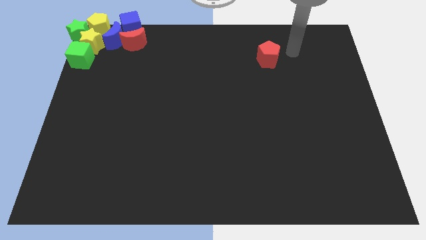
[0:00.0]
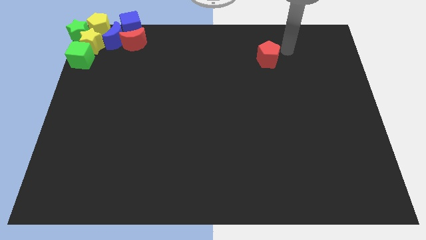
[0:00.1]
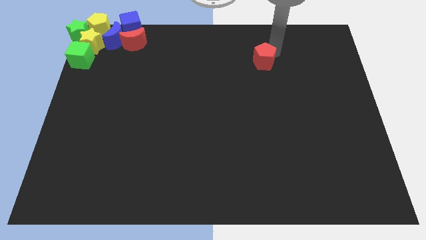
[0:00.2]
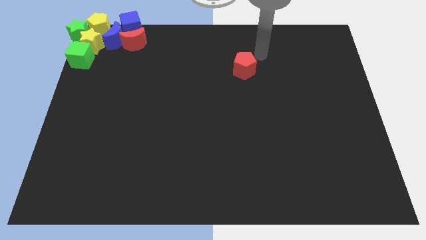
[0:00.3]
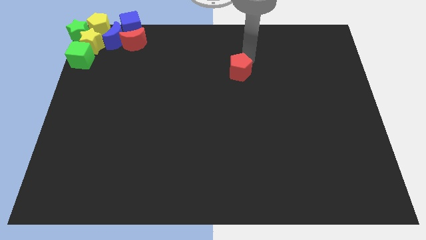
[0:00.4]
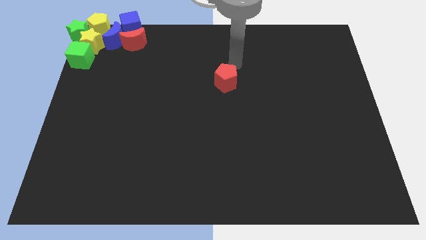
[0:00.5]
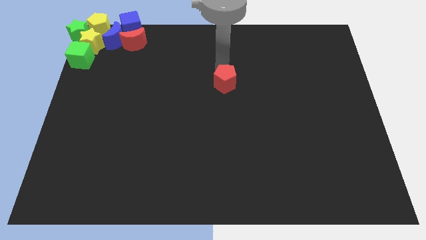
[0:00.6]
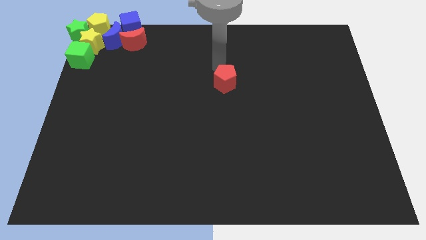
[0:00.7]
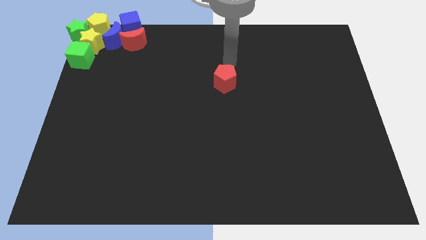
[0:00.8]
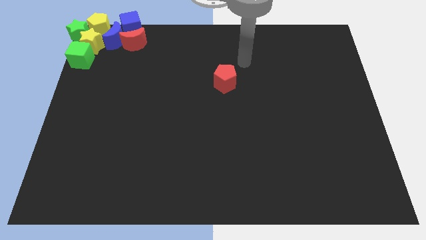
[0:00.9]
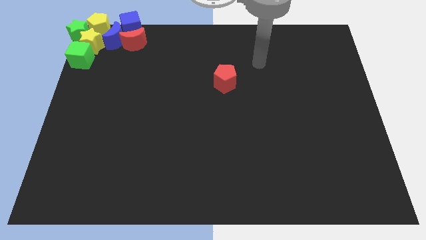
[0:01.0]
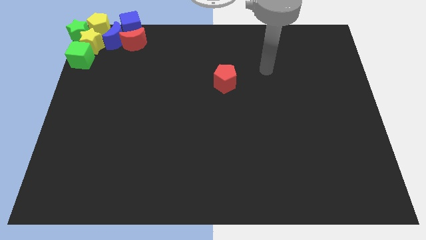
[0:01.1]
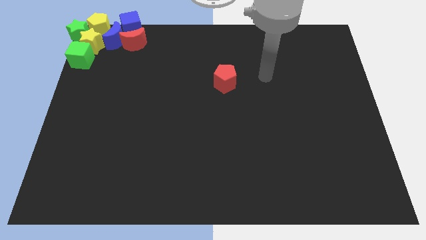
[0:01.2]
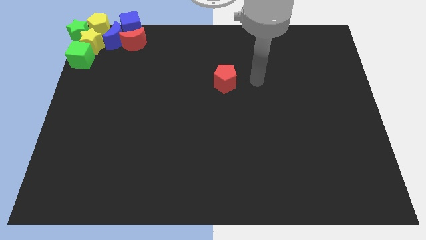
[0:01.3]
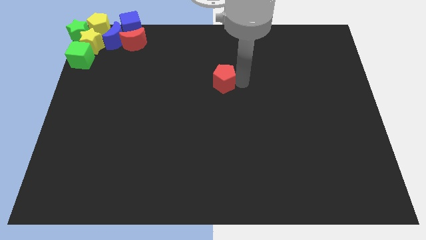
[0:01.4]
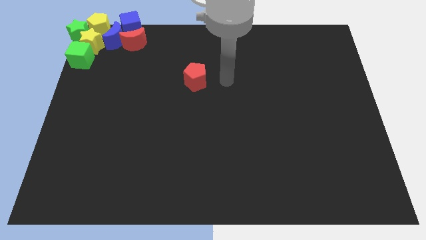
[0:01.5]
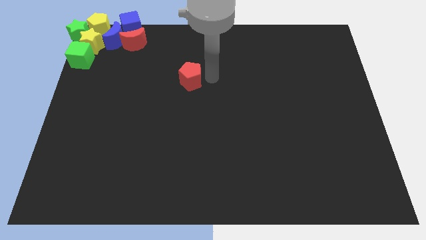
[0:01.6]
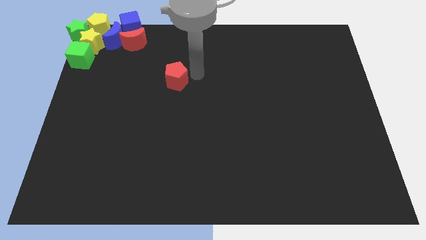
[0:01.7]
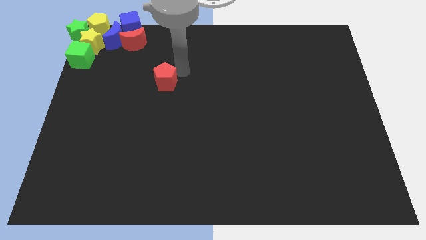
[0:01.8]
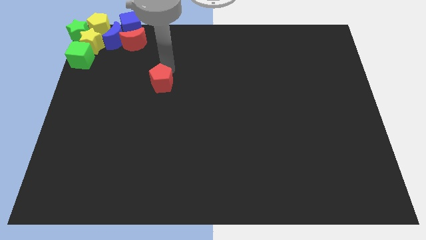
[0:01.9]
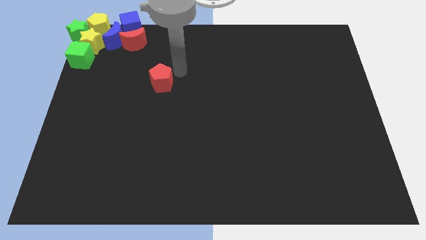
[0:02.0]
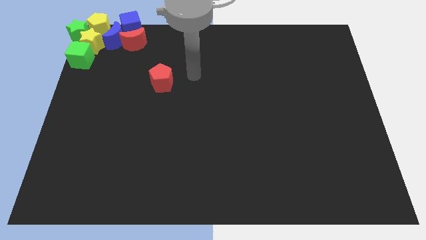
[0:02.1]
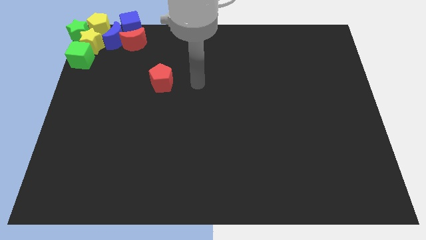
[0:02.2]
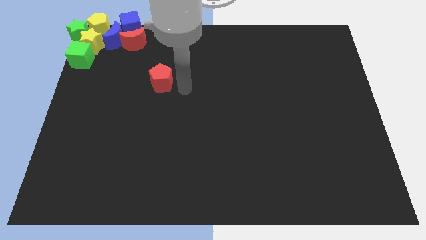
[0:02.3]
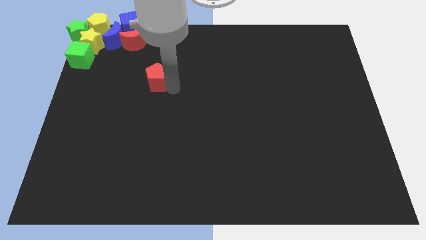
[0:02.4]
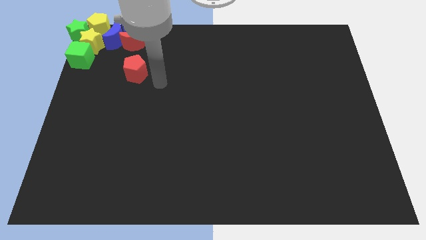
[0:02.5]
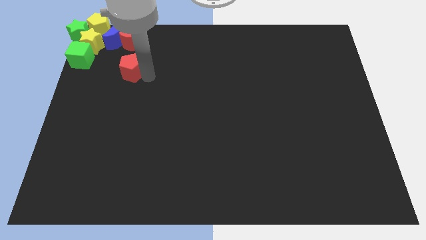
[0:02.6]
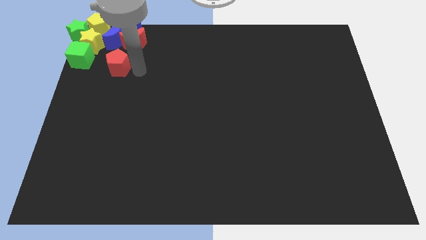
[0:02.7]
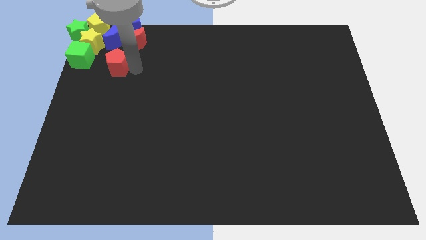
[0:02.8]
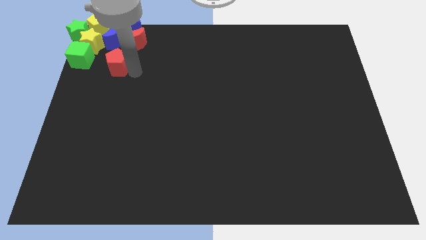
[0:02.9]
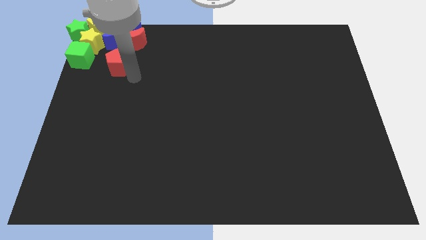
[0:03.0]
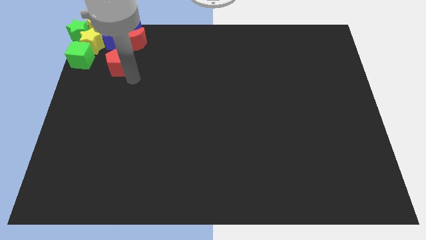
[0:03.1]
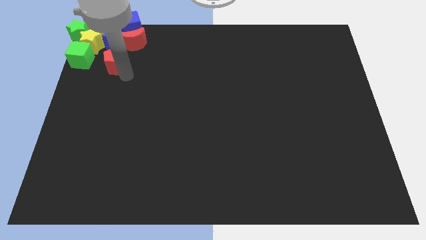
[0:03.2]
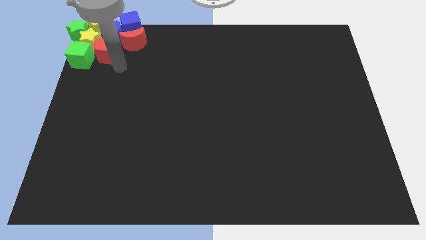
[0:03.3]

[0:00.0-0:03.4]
move the red pentagon to the bottom of blue crescent

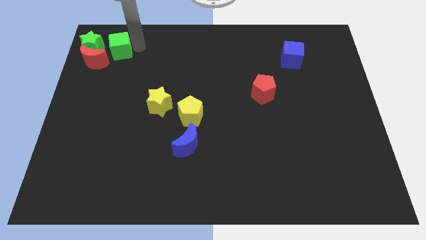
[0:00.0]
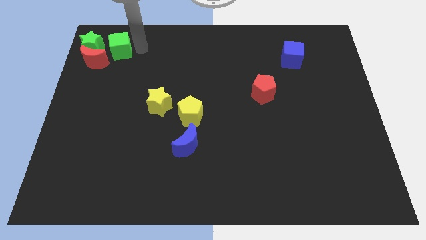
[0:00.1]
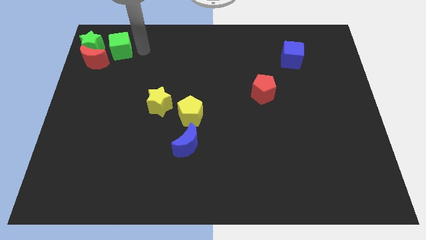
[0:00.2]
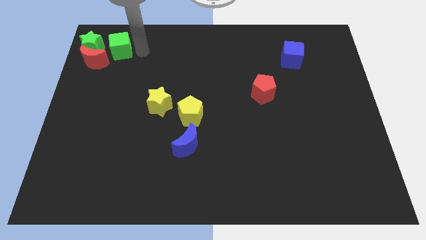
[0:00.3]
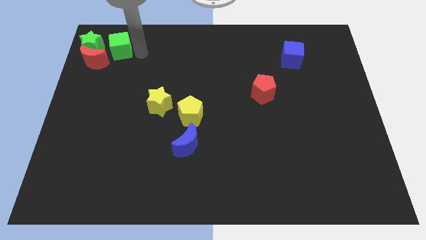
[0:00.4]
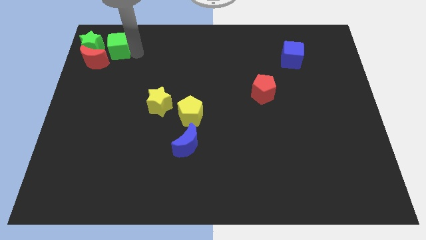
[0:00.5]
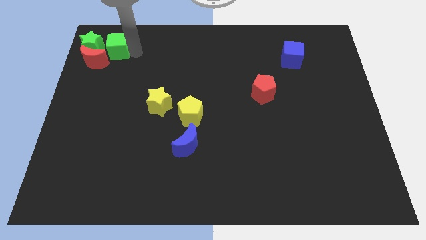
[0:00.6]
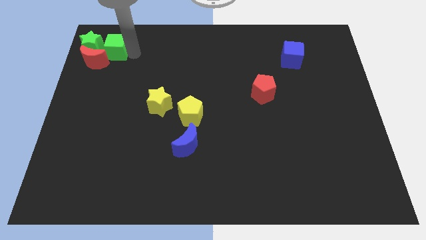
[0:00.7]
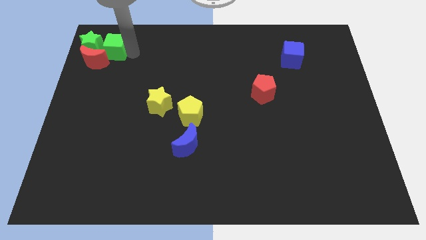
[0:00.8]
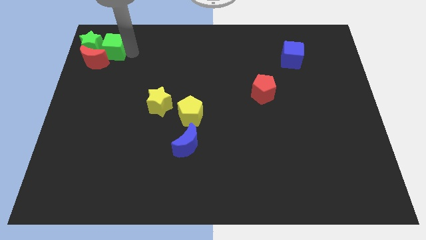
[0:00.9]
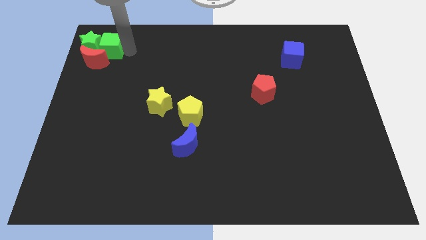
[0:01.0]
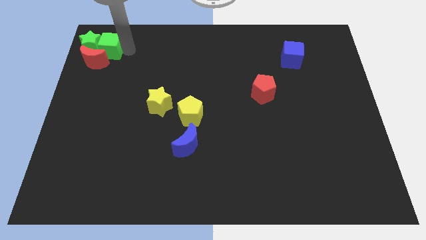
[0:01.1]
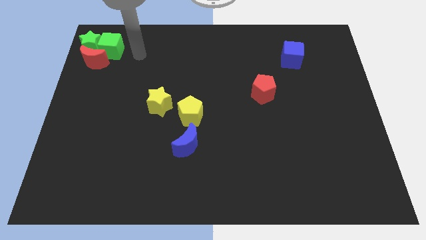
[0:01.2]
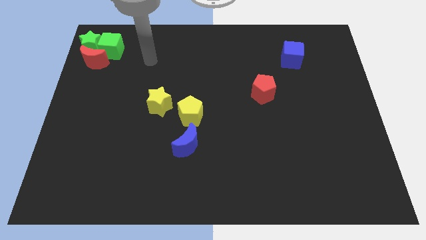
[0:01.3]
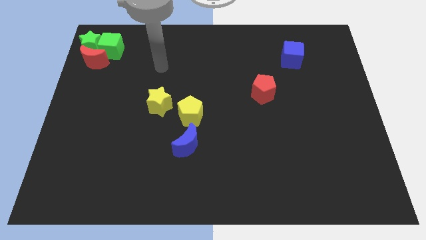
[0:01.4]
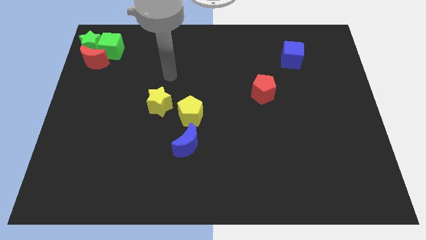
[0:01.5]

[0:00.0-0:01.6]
push the green cube into the green star

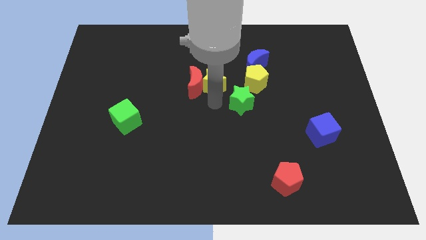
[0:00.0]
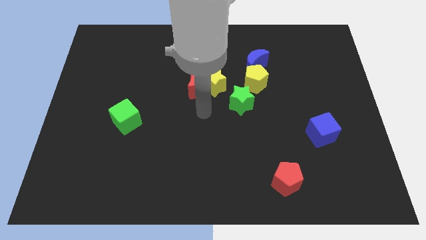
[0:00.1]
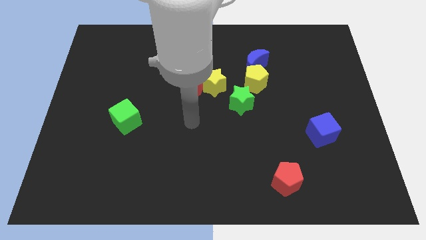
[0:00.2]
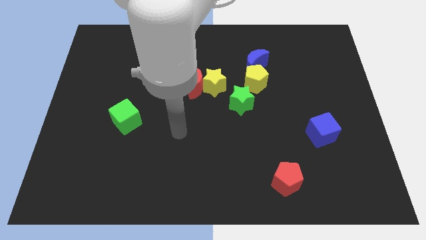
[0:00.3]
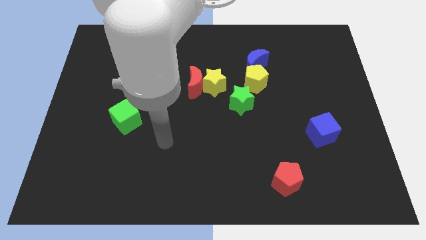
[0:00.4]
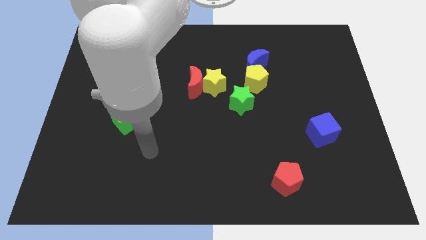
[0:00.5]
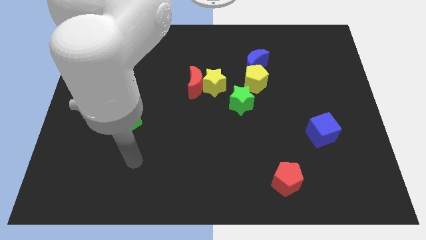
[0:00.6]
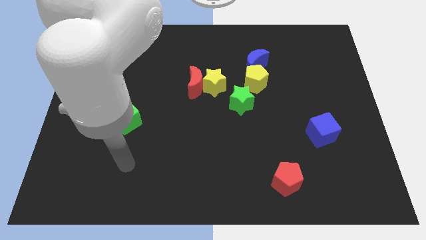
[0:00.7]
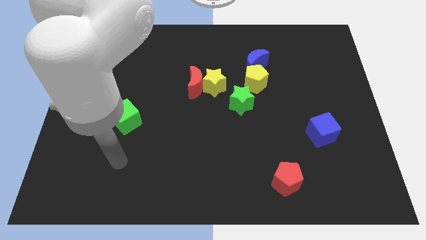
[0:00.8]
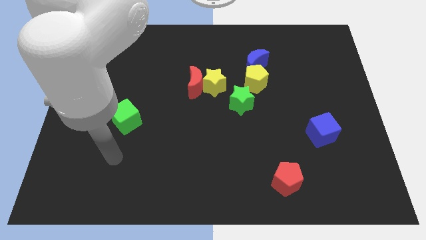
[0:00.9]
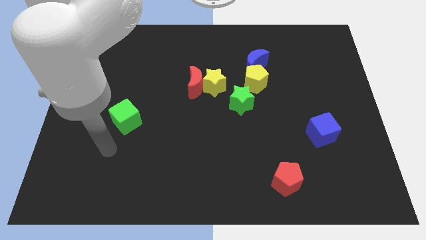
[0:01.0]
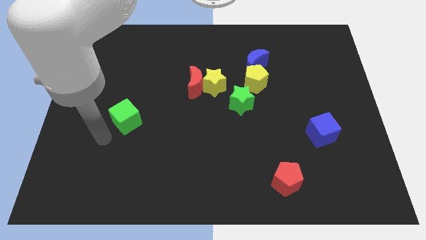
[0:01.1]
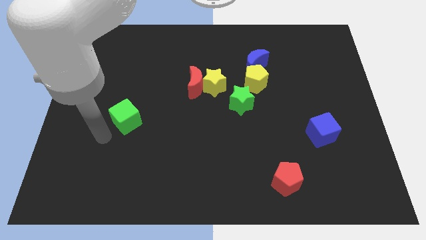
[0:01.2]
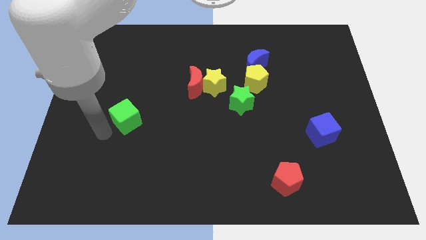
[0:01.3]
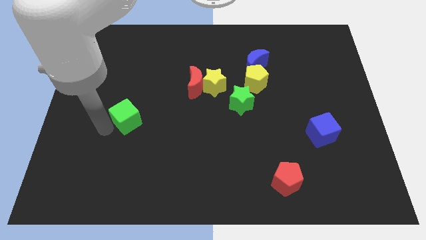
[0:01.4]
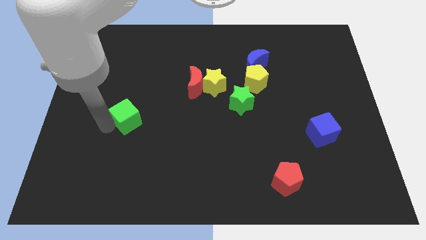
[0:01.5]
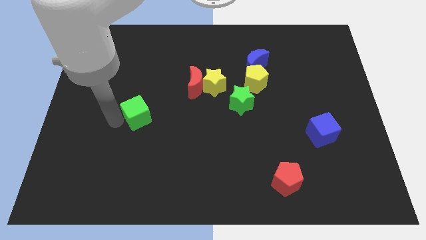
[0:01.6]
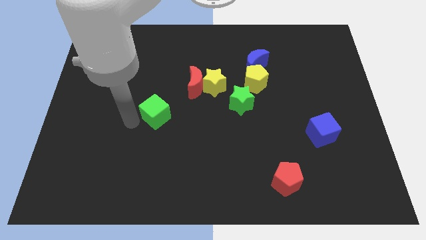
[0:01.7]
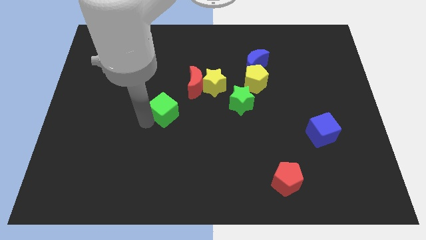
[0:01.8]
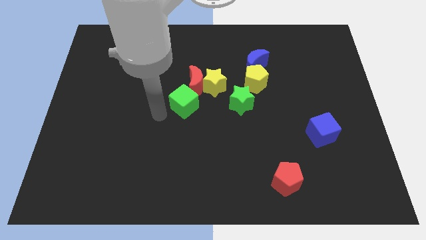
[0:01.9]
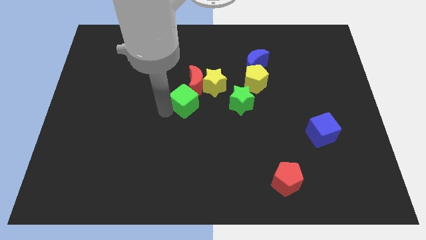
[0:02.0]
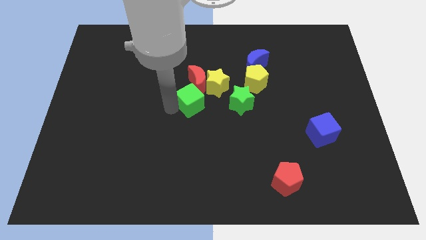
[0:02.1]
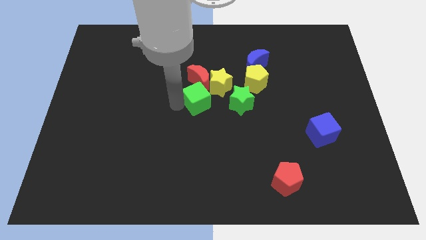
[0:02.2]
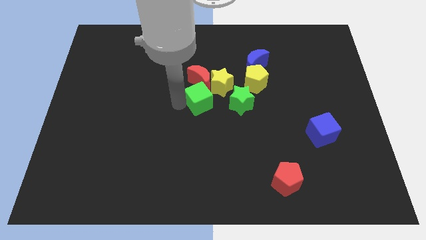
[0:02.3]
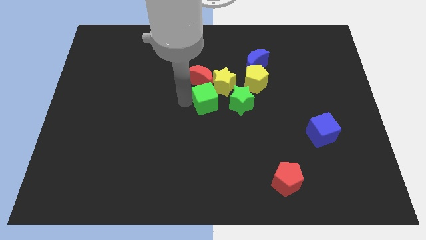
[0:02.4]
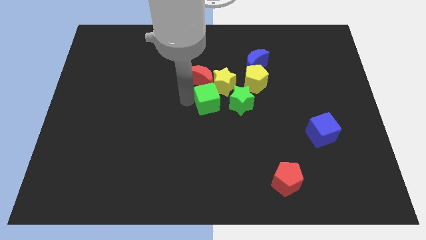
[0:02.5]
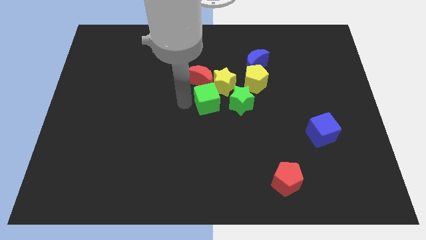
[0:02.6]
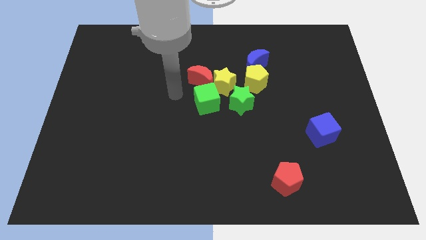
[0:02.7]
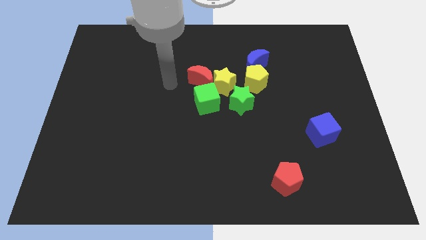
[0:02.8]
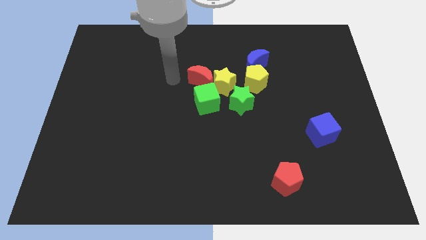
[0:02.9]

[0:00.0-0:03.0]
push the green cube into the group of blocks

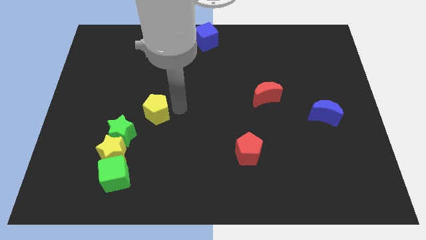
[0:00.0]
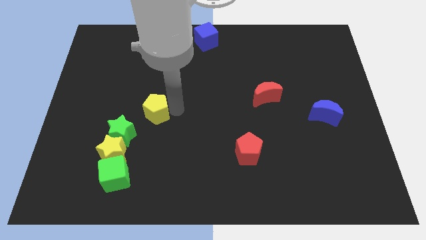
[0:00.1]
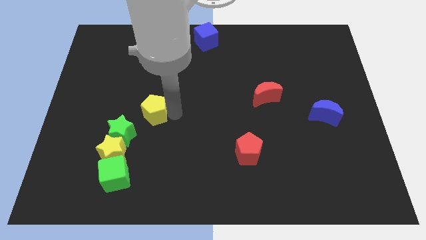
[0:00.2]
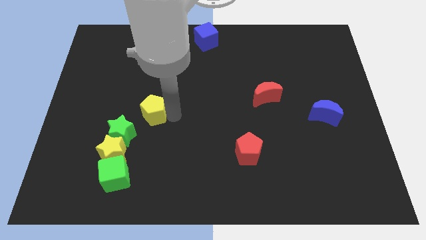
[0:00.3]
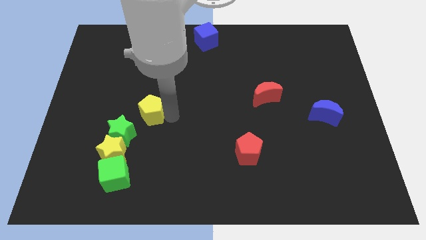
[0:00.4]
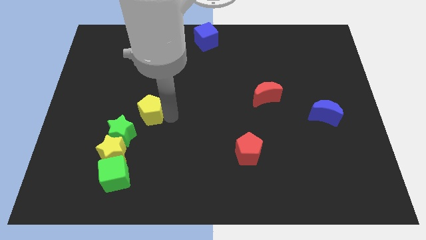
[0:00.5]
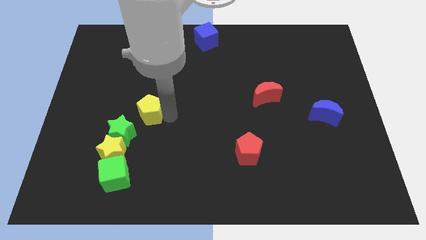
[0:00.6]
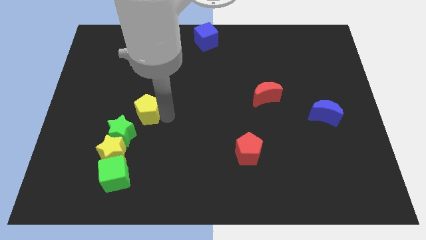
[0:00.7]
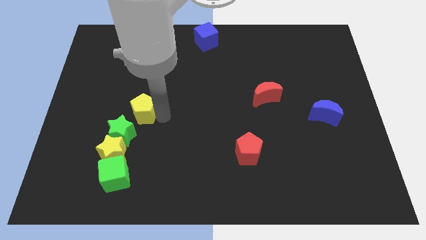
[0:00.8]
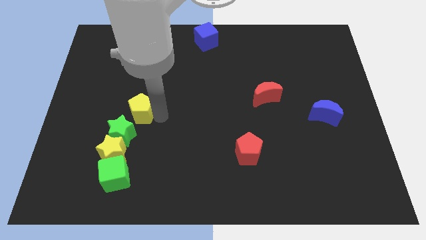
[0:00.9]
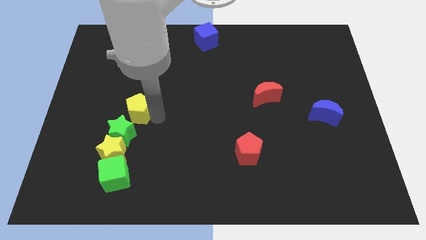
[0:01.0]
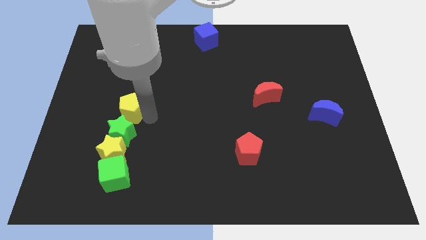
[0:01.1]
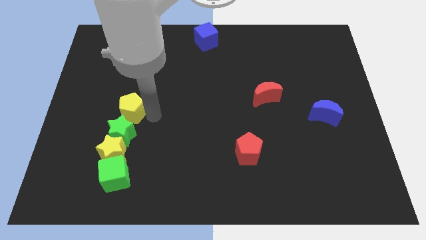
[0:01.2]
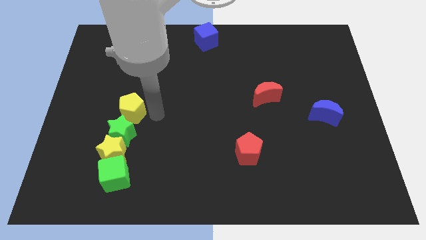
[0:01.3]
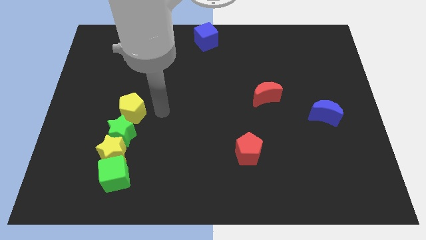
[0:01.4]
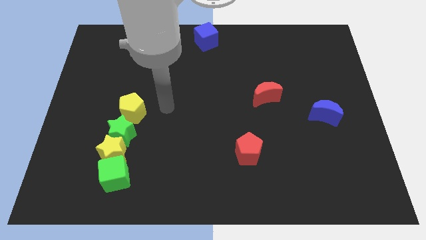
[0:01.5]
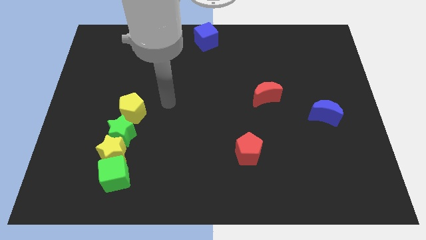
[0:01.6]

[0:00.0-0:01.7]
place the yellow pentagon above the green star
